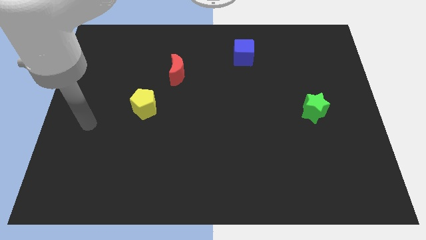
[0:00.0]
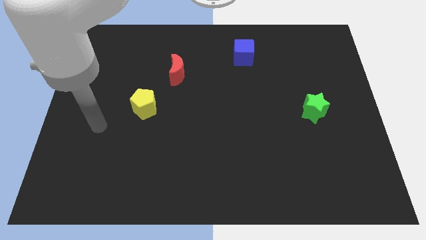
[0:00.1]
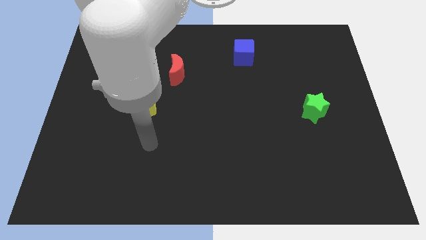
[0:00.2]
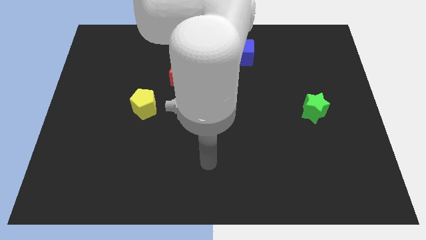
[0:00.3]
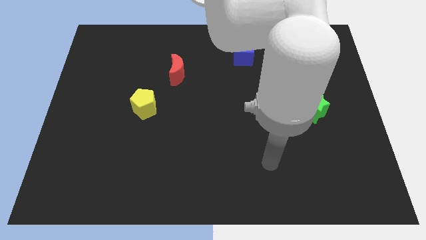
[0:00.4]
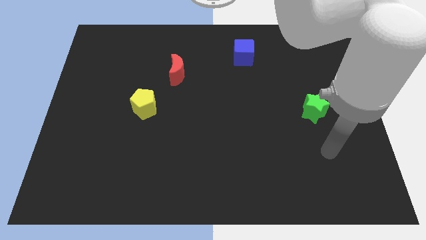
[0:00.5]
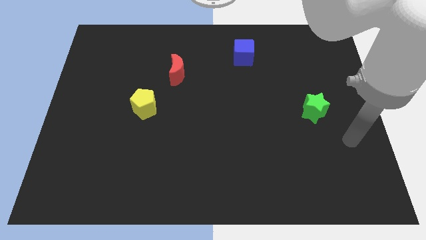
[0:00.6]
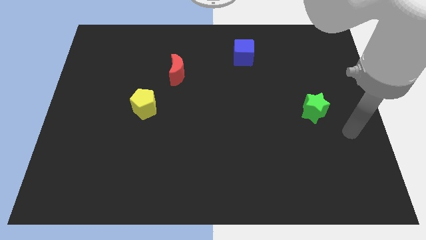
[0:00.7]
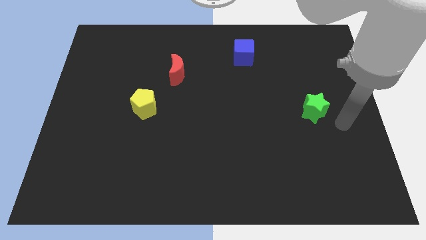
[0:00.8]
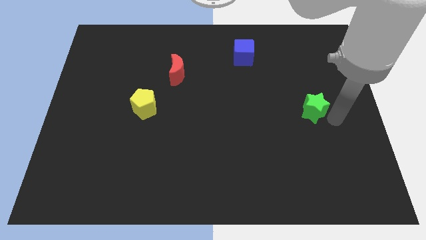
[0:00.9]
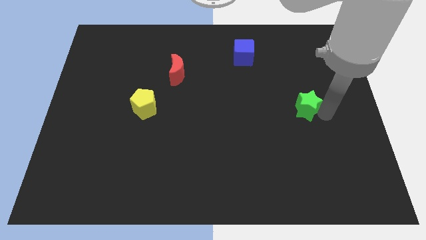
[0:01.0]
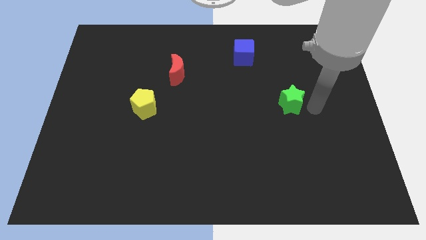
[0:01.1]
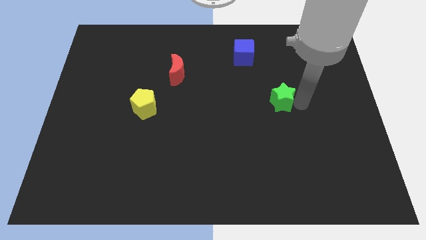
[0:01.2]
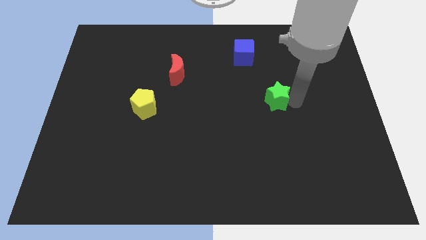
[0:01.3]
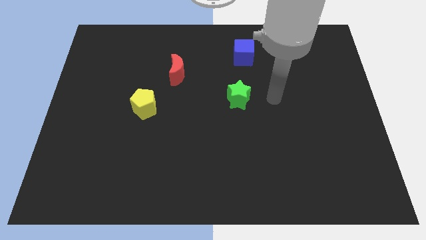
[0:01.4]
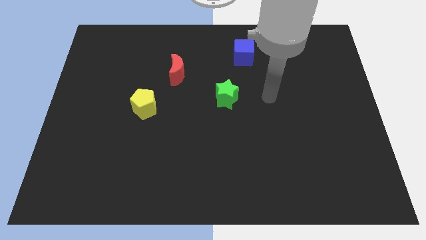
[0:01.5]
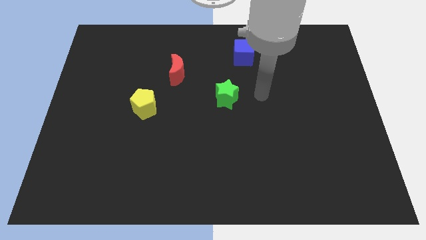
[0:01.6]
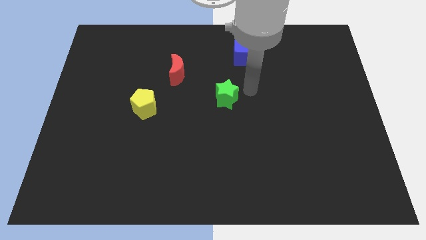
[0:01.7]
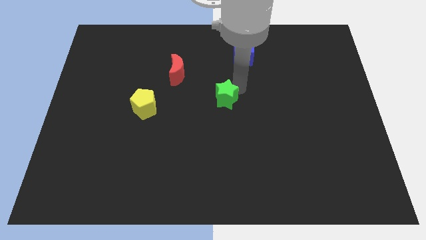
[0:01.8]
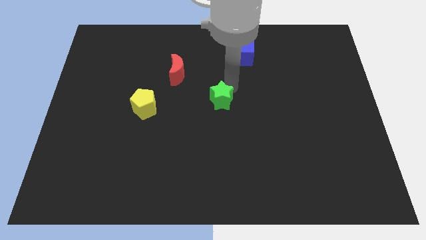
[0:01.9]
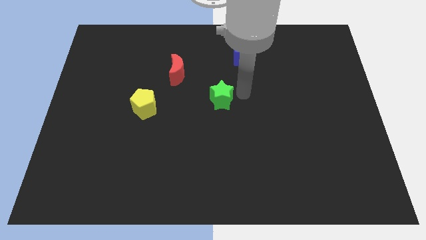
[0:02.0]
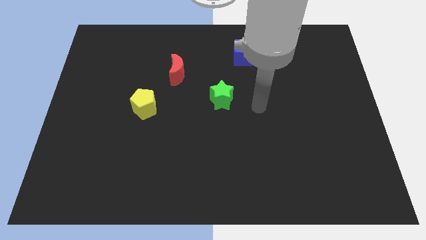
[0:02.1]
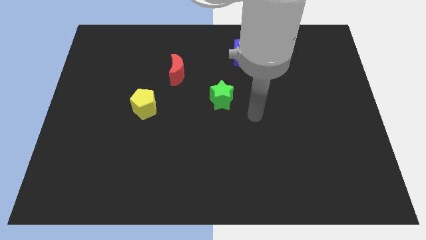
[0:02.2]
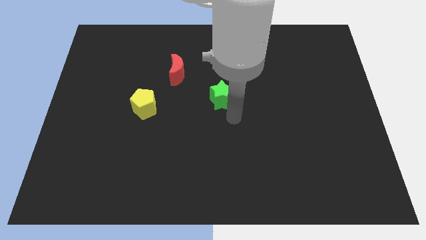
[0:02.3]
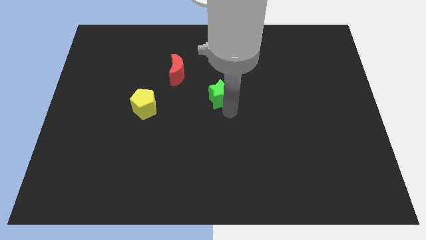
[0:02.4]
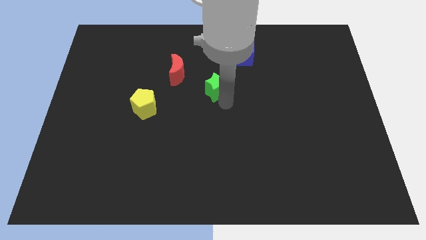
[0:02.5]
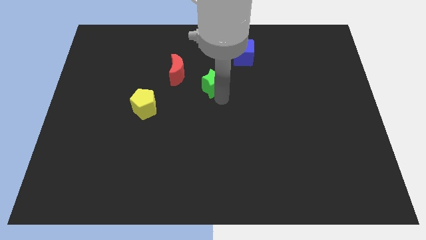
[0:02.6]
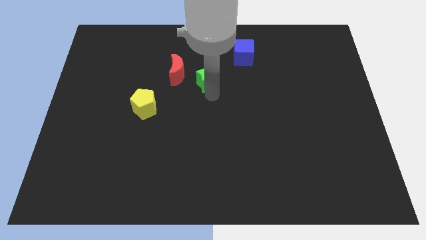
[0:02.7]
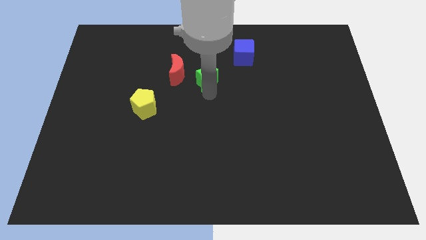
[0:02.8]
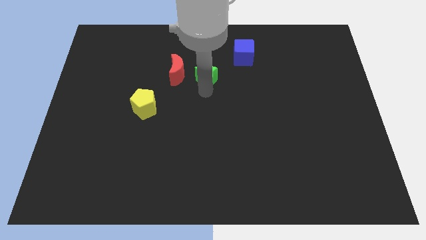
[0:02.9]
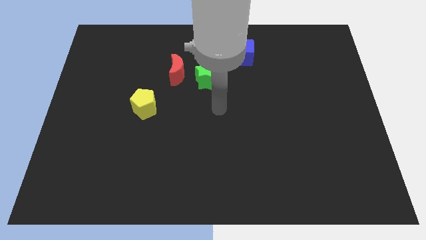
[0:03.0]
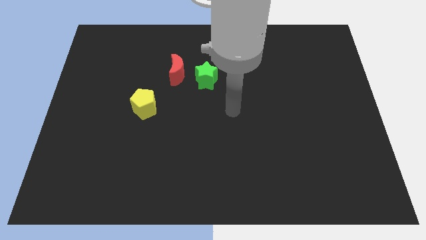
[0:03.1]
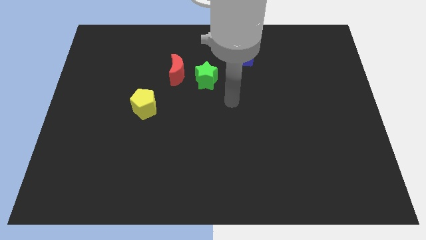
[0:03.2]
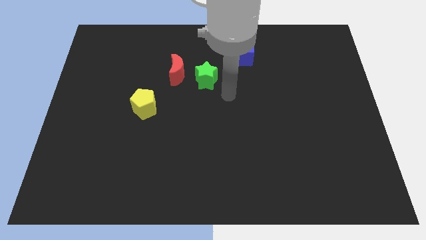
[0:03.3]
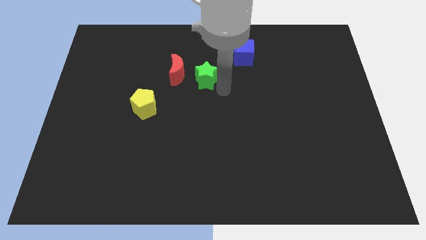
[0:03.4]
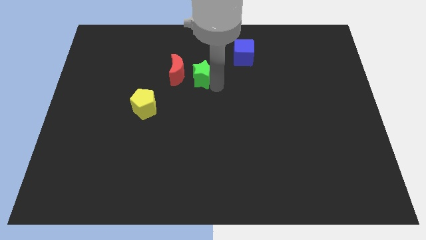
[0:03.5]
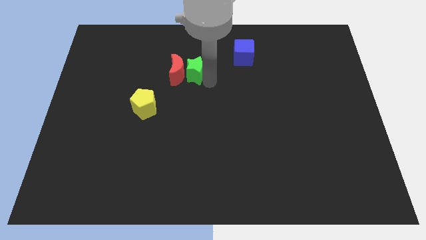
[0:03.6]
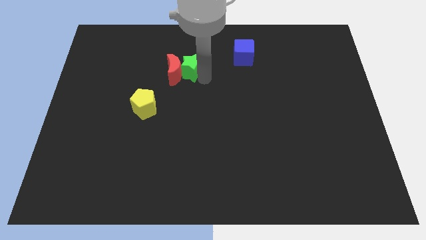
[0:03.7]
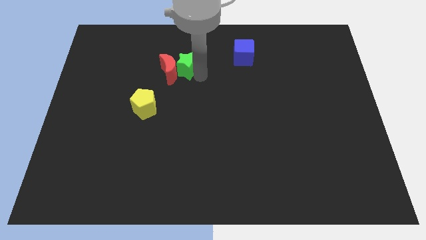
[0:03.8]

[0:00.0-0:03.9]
put the star to the red moon

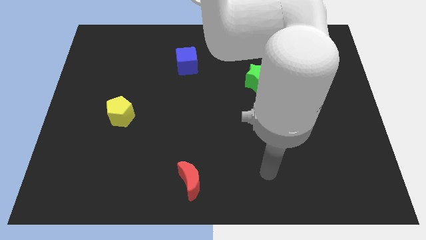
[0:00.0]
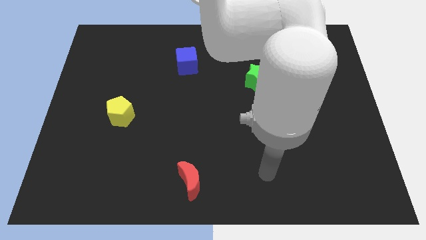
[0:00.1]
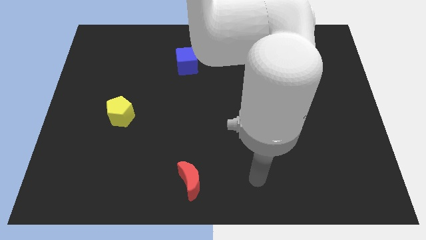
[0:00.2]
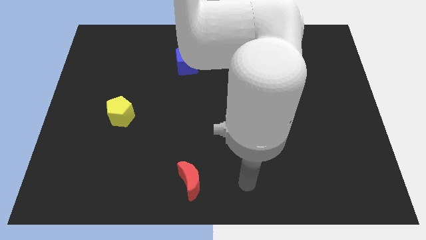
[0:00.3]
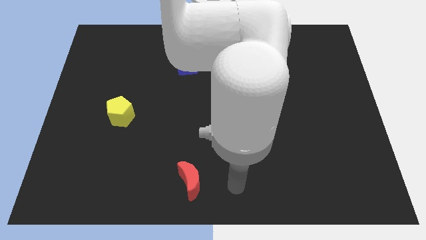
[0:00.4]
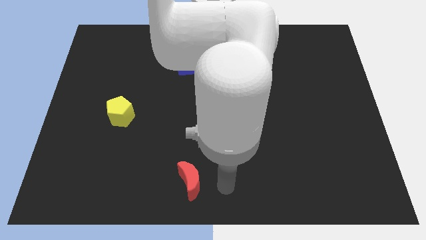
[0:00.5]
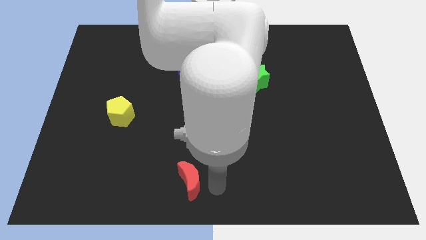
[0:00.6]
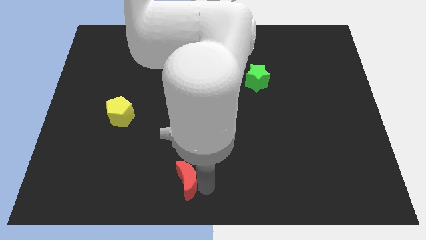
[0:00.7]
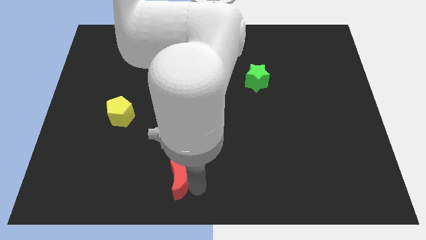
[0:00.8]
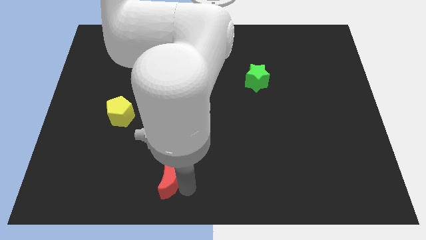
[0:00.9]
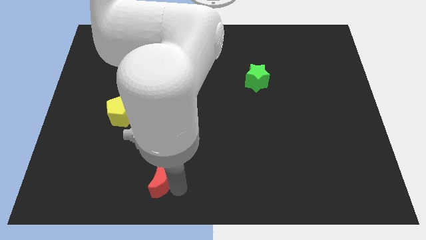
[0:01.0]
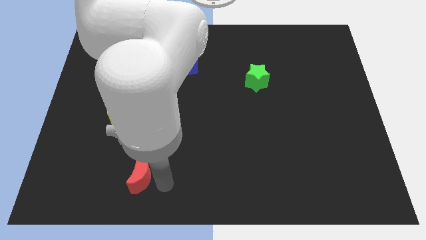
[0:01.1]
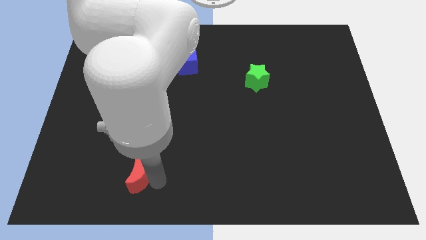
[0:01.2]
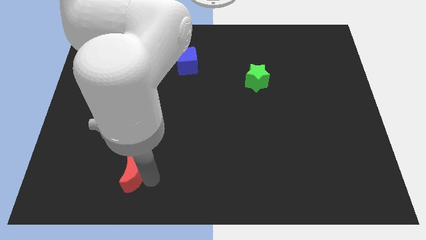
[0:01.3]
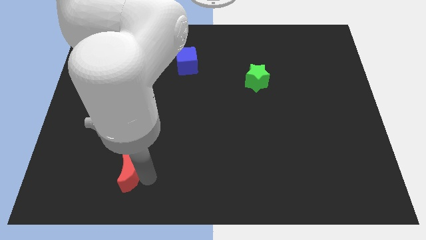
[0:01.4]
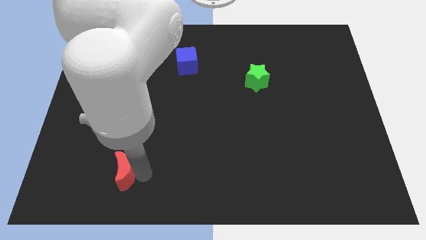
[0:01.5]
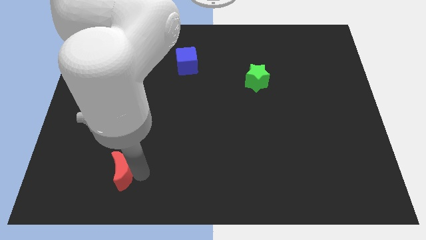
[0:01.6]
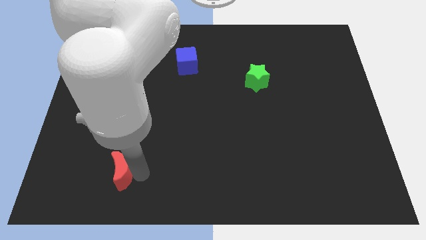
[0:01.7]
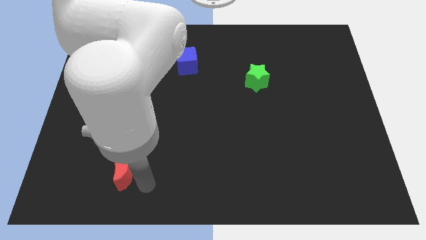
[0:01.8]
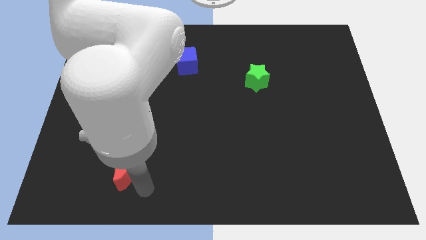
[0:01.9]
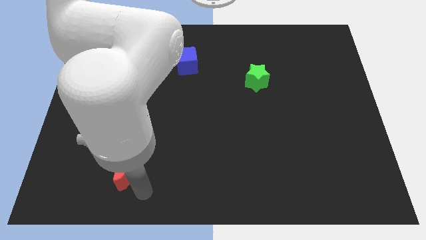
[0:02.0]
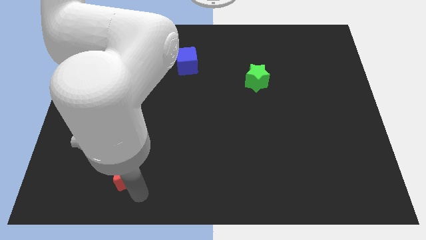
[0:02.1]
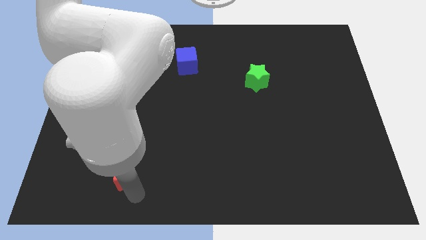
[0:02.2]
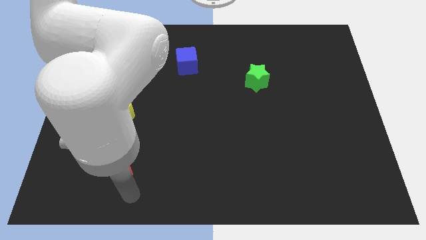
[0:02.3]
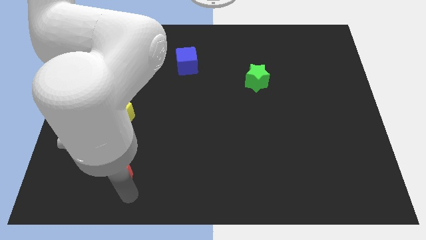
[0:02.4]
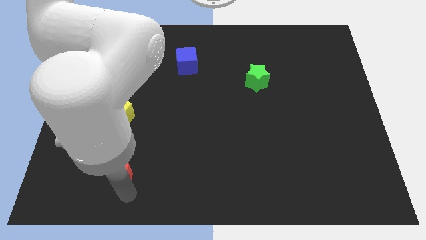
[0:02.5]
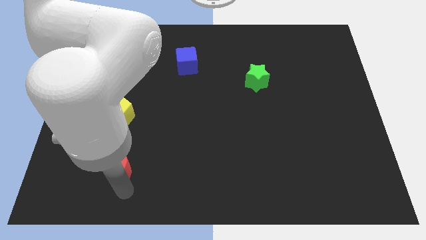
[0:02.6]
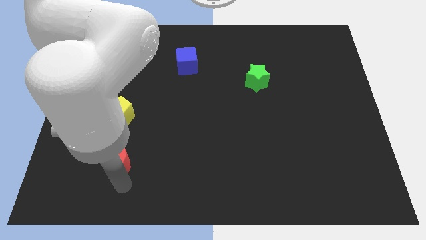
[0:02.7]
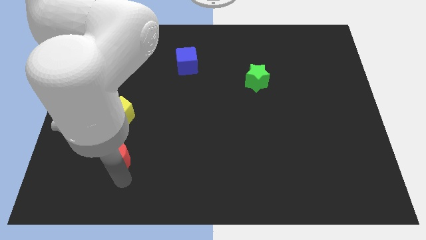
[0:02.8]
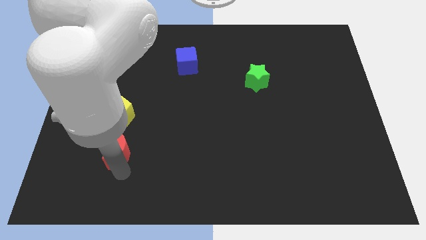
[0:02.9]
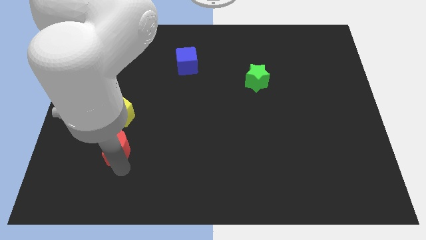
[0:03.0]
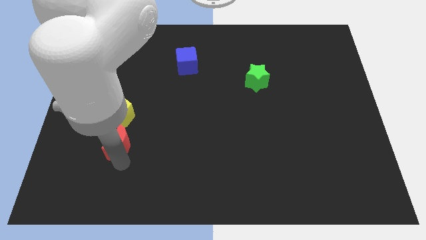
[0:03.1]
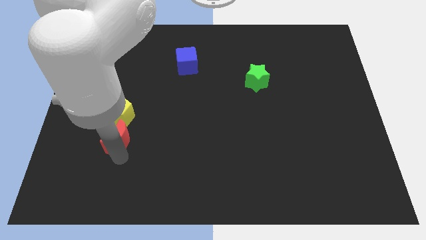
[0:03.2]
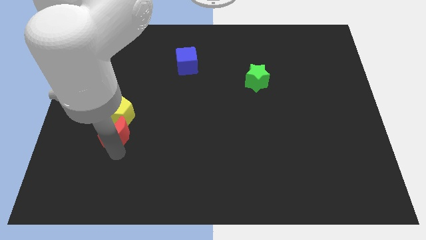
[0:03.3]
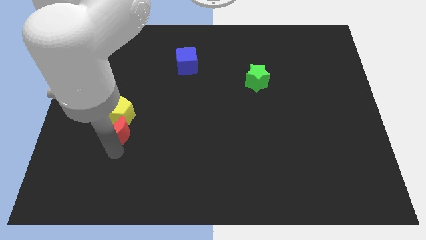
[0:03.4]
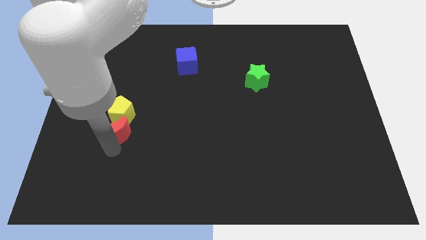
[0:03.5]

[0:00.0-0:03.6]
push the red block towards the pentagon

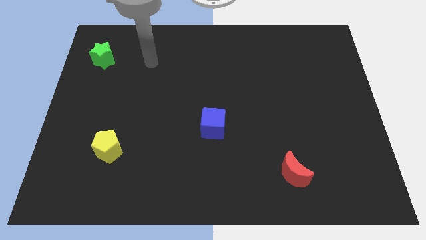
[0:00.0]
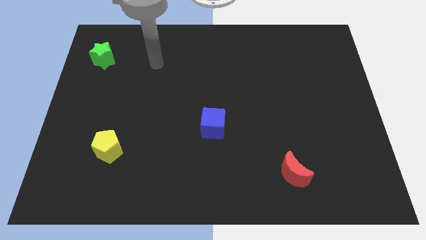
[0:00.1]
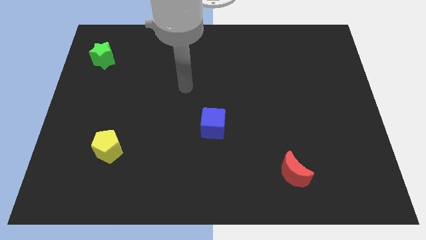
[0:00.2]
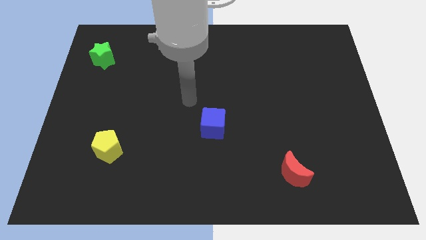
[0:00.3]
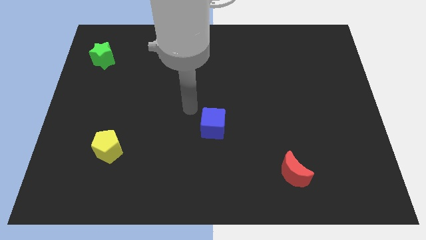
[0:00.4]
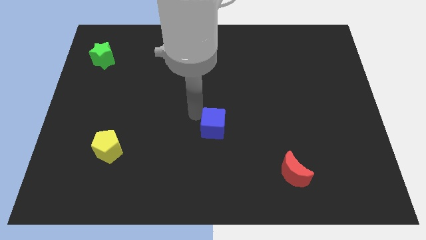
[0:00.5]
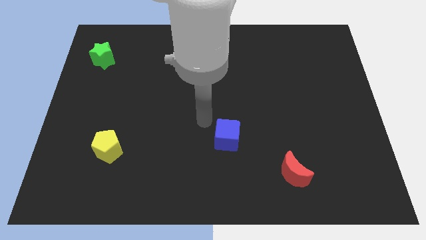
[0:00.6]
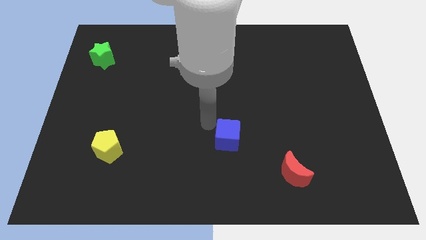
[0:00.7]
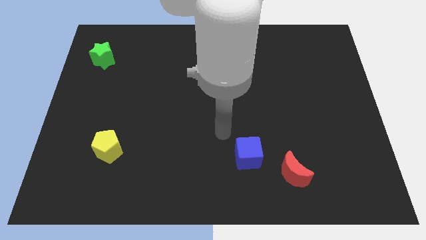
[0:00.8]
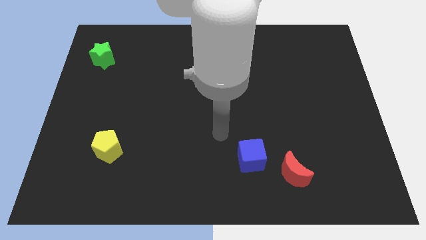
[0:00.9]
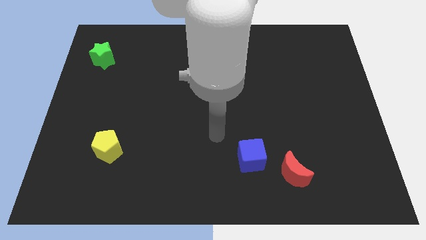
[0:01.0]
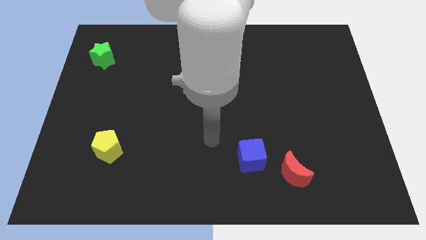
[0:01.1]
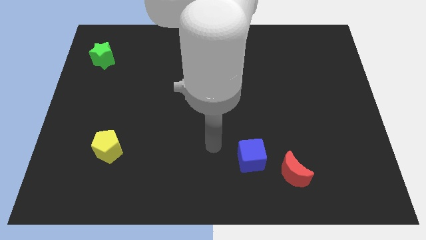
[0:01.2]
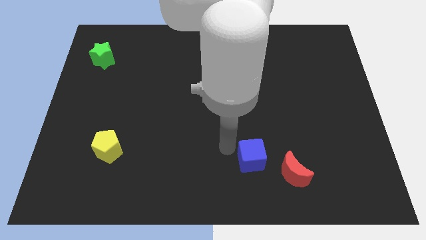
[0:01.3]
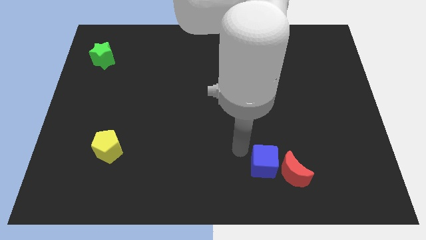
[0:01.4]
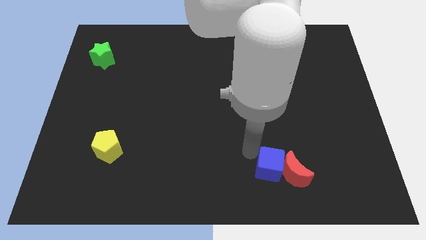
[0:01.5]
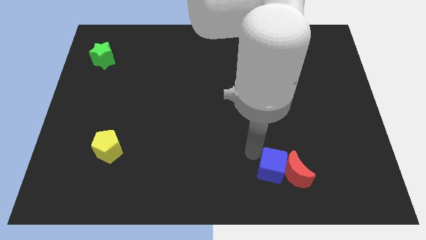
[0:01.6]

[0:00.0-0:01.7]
slide the blue cube towards the red moon
